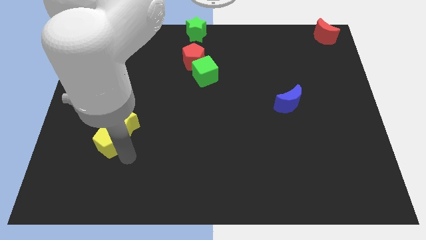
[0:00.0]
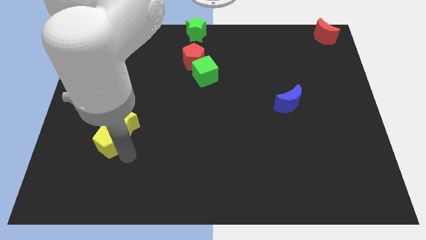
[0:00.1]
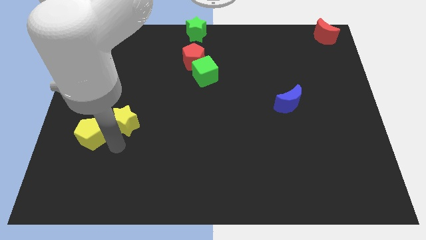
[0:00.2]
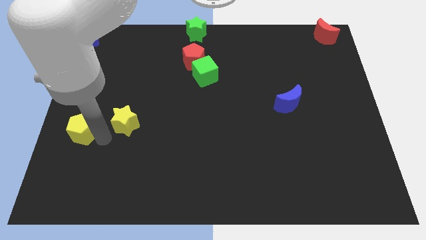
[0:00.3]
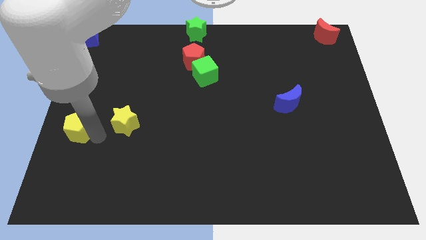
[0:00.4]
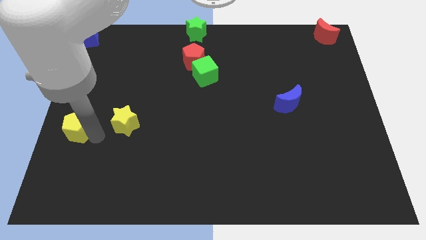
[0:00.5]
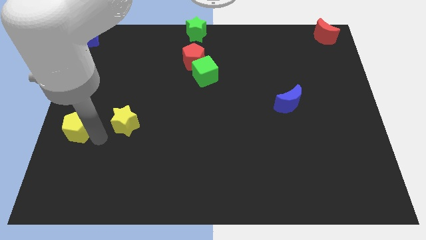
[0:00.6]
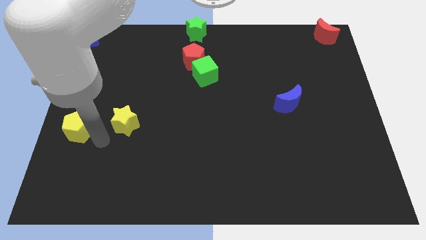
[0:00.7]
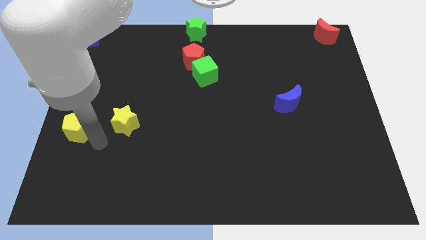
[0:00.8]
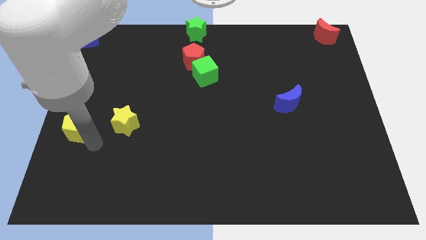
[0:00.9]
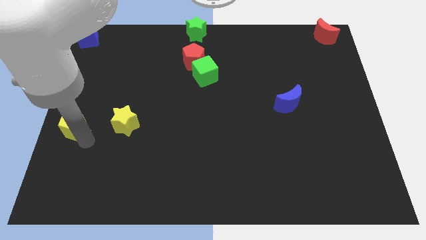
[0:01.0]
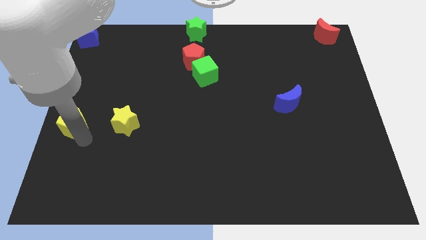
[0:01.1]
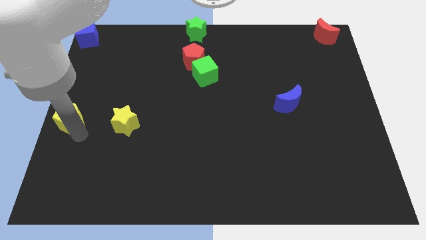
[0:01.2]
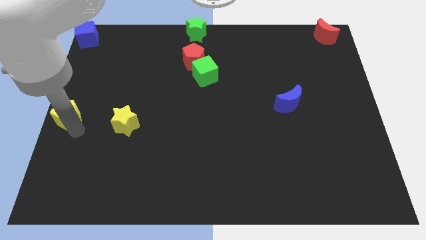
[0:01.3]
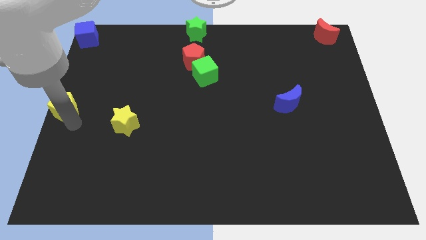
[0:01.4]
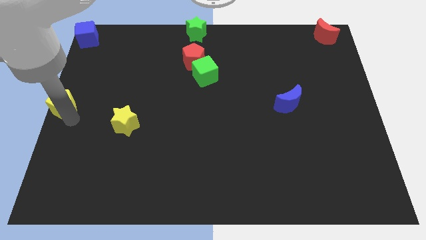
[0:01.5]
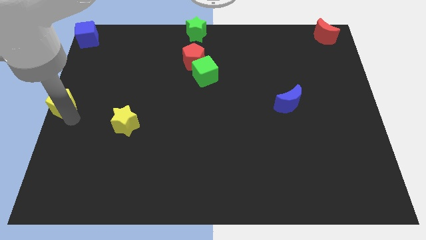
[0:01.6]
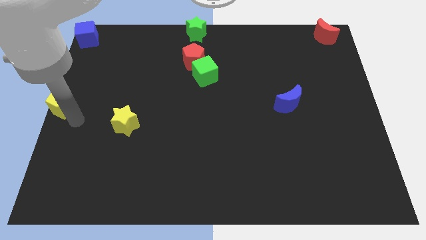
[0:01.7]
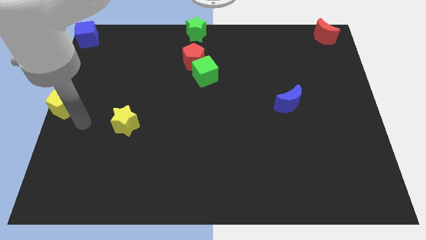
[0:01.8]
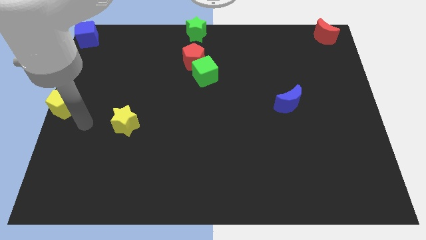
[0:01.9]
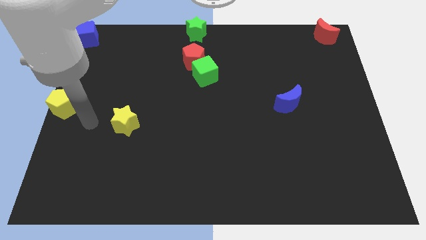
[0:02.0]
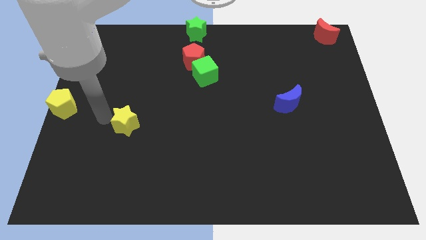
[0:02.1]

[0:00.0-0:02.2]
place the yellow pentagon at the center left side of the board

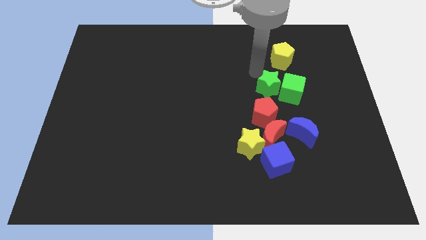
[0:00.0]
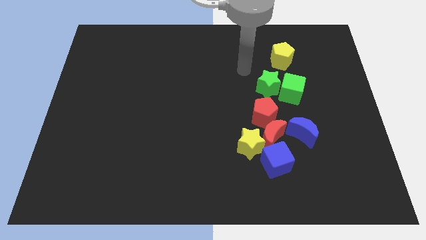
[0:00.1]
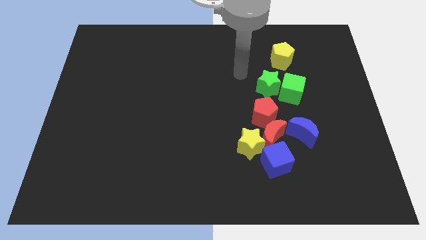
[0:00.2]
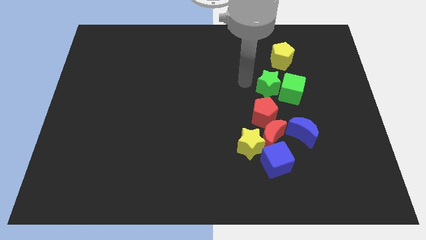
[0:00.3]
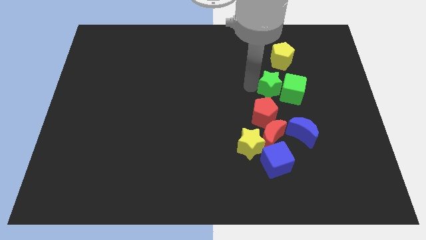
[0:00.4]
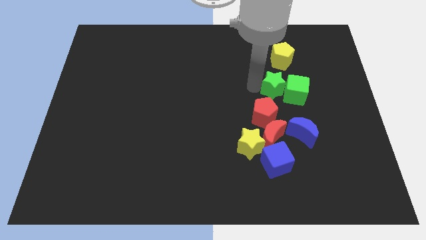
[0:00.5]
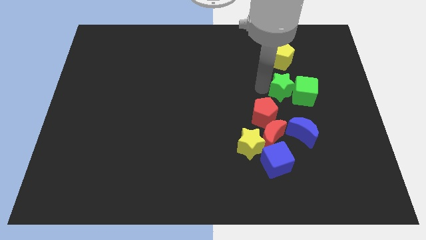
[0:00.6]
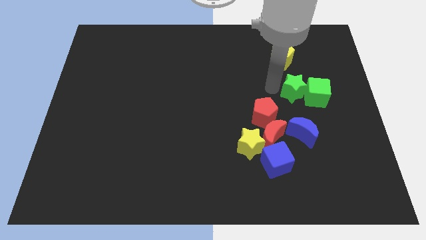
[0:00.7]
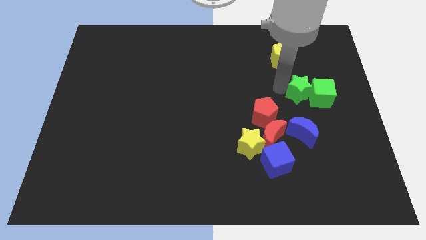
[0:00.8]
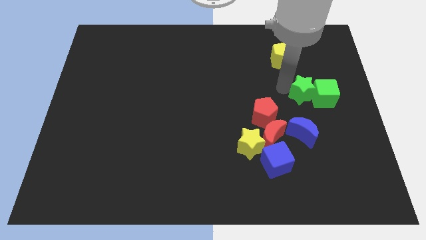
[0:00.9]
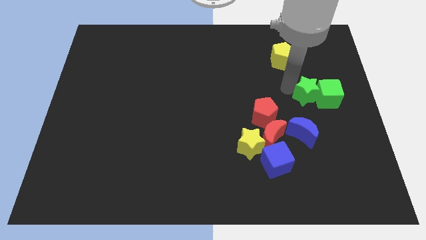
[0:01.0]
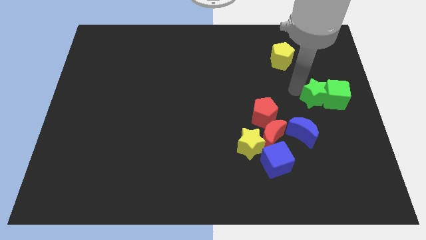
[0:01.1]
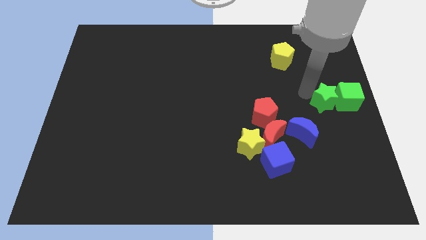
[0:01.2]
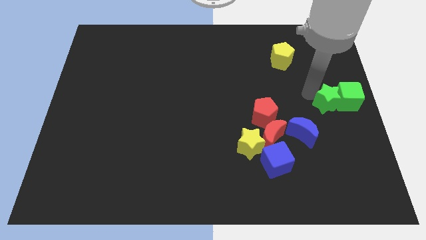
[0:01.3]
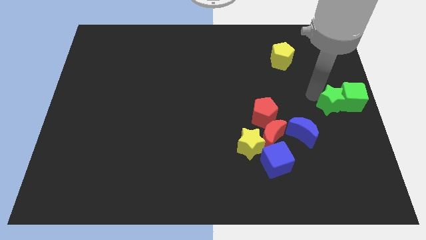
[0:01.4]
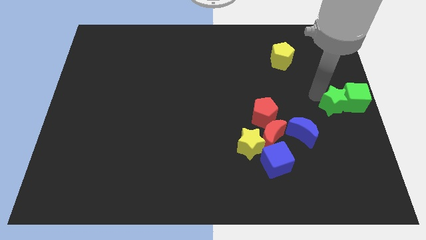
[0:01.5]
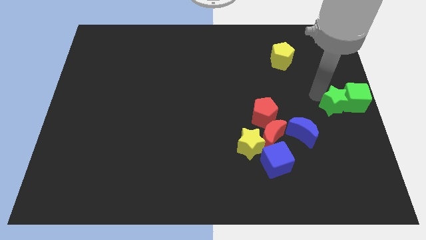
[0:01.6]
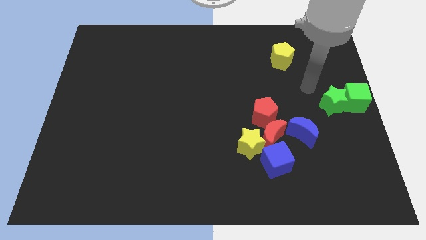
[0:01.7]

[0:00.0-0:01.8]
place both the green blocks at the center right of the board

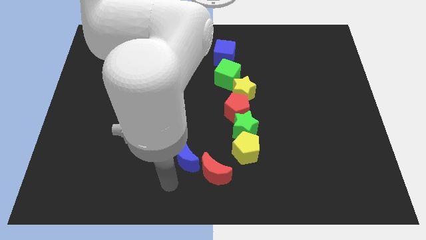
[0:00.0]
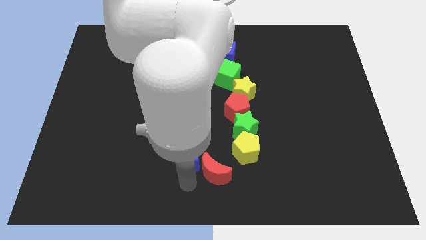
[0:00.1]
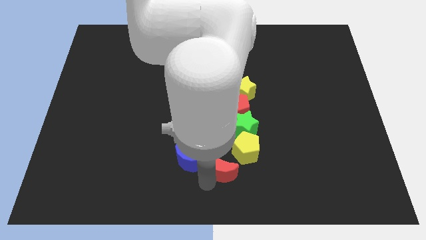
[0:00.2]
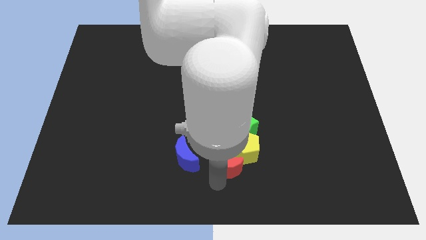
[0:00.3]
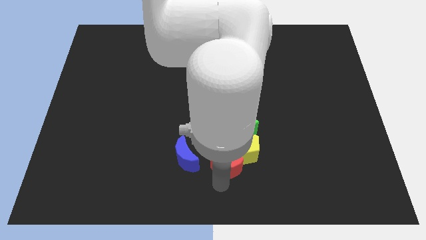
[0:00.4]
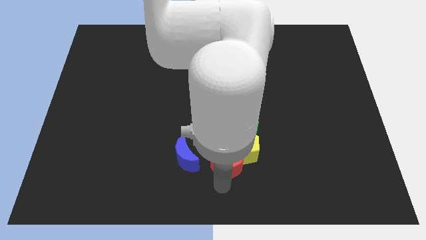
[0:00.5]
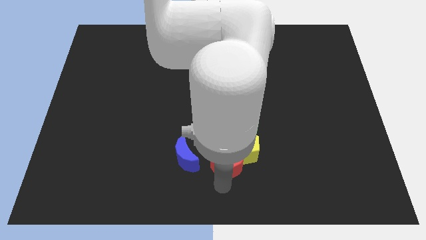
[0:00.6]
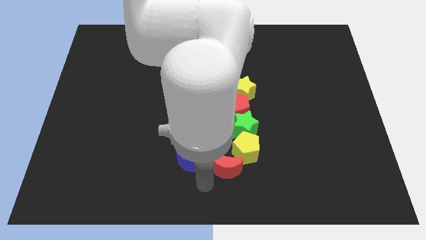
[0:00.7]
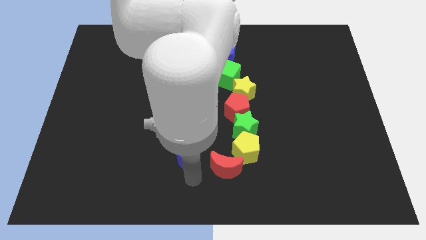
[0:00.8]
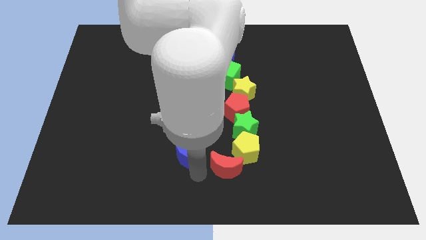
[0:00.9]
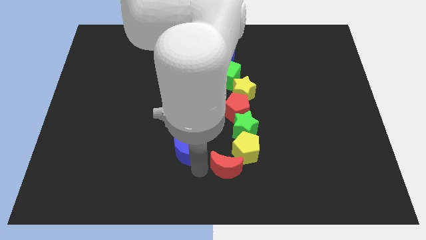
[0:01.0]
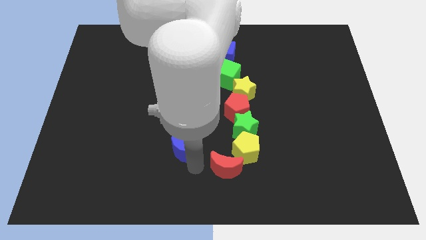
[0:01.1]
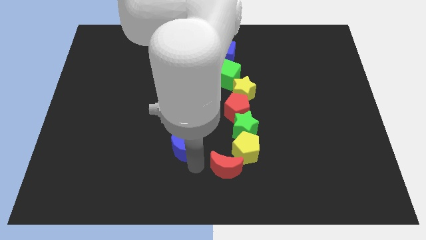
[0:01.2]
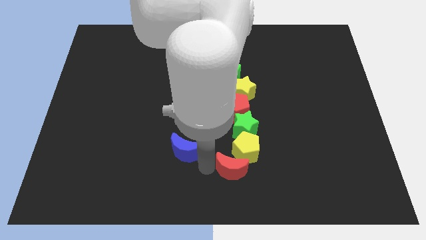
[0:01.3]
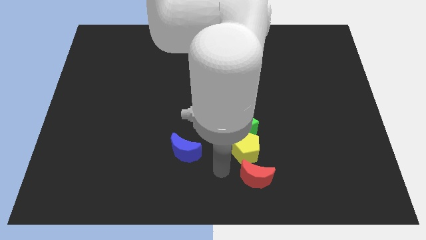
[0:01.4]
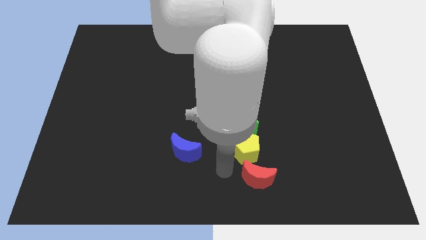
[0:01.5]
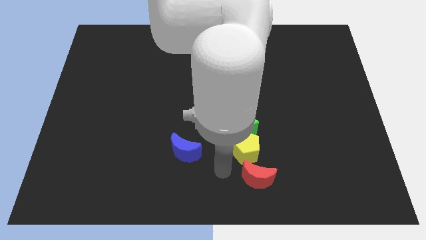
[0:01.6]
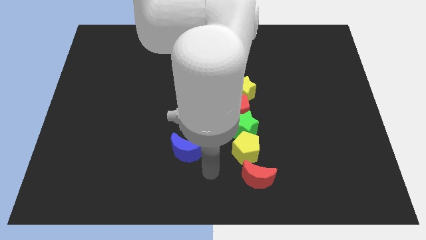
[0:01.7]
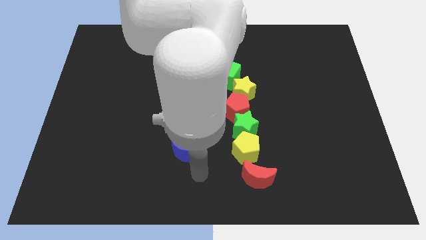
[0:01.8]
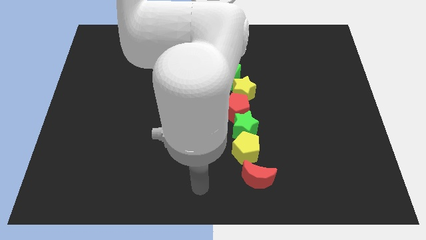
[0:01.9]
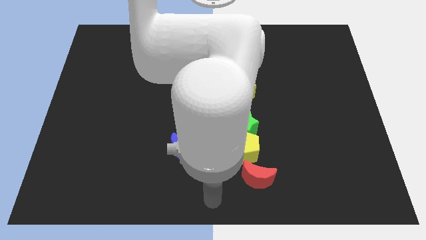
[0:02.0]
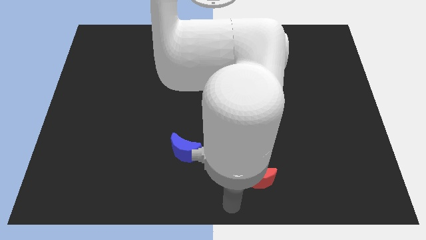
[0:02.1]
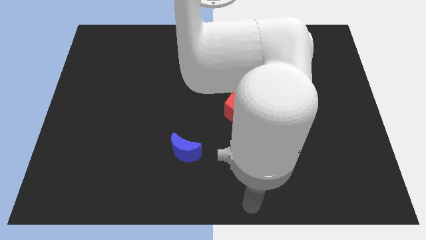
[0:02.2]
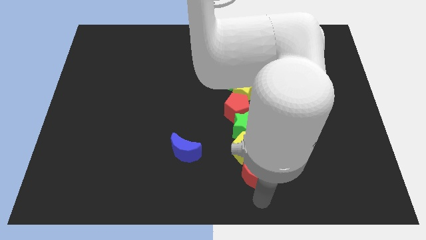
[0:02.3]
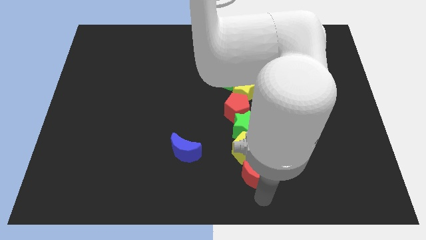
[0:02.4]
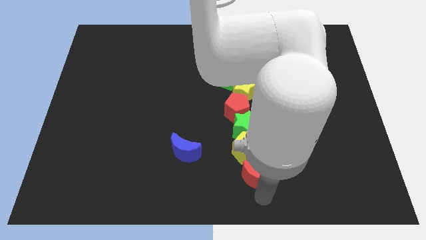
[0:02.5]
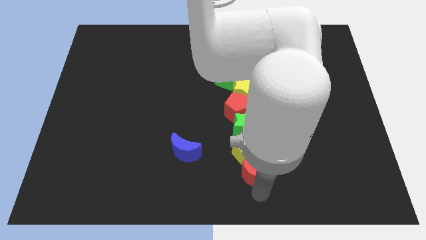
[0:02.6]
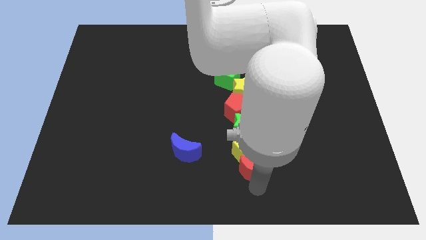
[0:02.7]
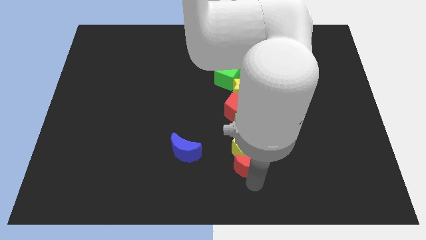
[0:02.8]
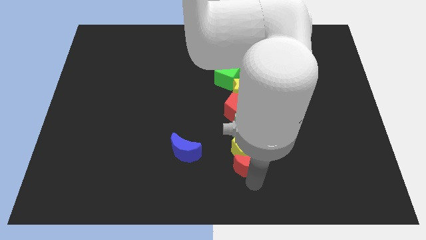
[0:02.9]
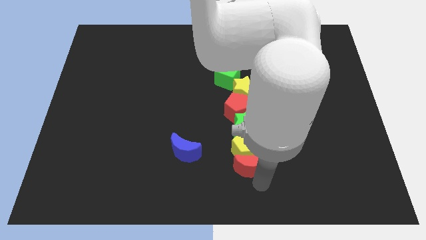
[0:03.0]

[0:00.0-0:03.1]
push the red crescent into the bottom of the yellow pentagon

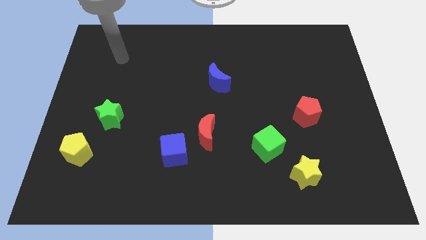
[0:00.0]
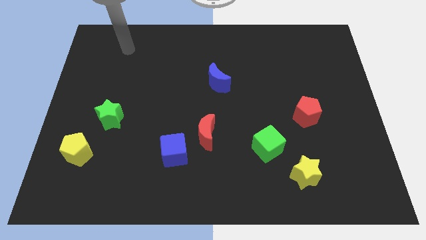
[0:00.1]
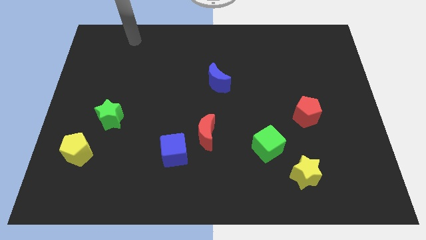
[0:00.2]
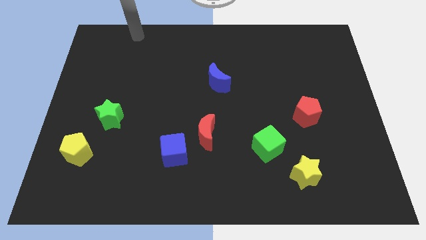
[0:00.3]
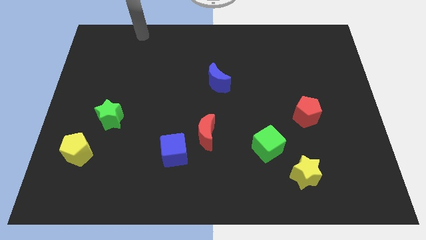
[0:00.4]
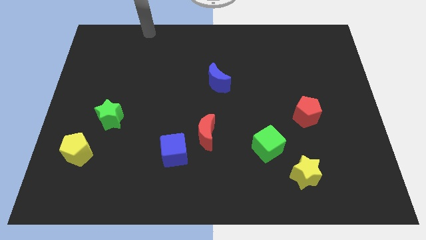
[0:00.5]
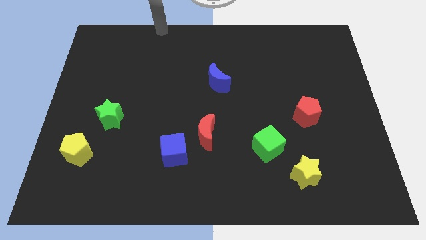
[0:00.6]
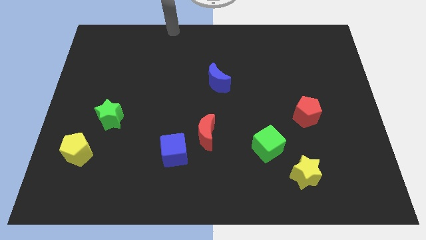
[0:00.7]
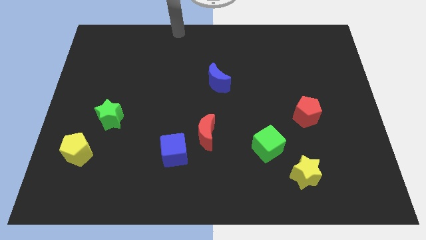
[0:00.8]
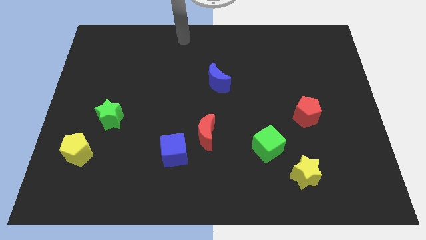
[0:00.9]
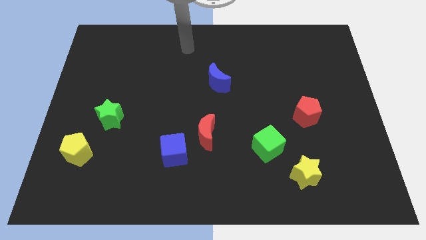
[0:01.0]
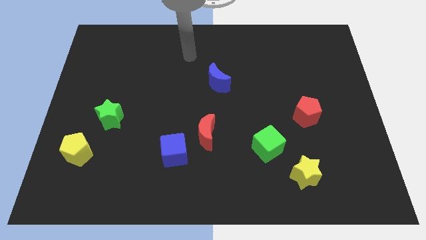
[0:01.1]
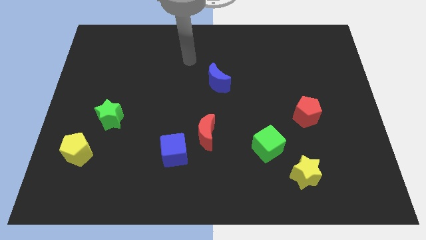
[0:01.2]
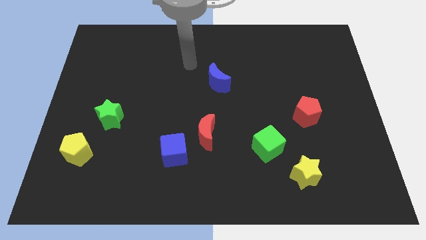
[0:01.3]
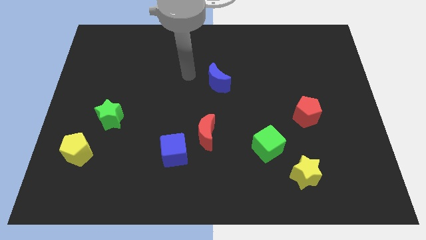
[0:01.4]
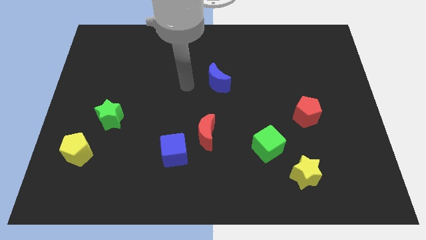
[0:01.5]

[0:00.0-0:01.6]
point your arm at the left of the blue crescent

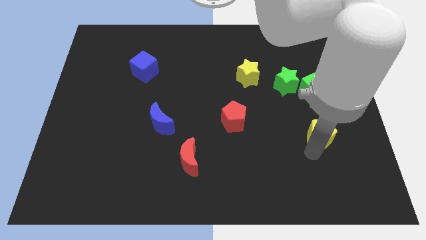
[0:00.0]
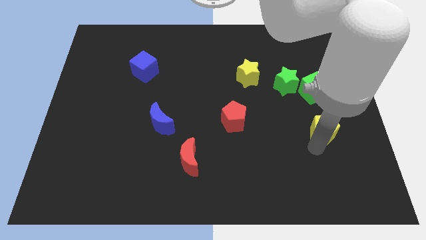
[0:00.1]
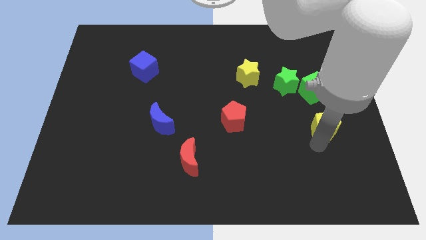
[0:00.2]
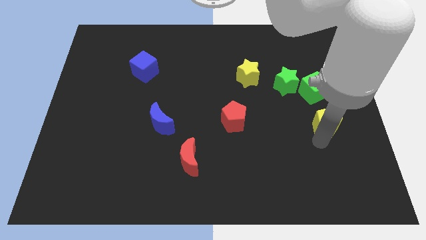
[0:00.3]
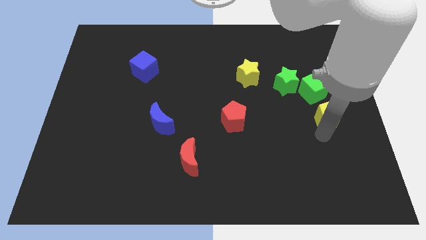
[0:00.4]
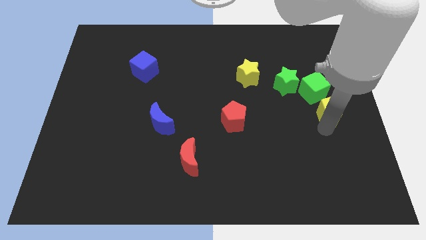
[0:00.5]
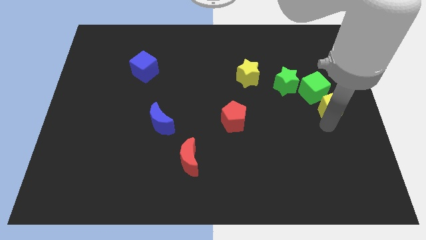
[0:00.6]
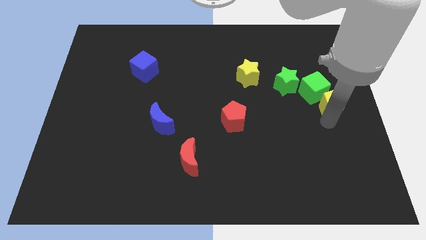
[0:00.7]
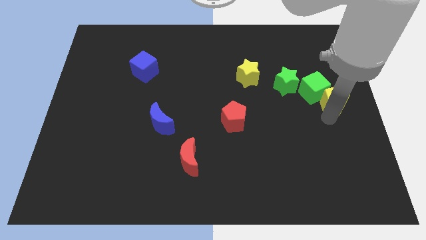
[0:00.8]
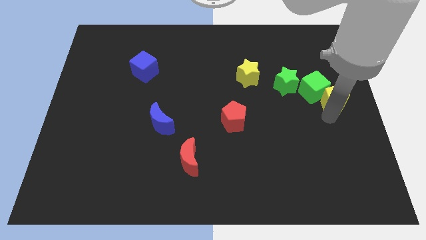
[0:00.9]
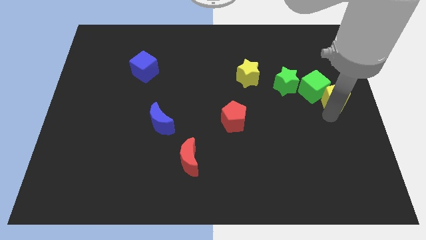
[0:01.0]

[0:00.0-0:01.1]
push yellow pentagon beside green cube
